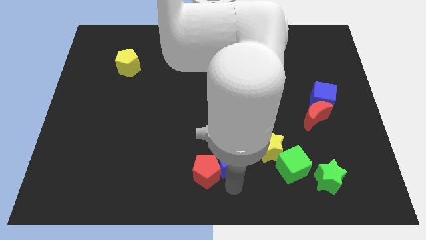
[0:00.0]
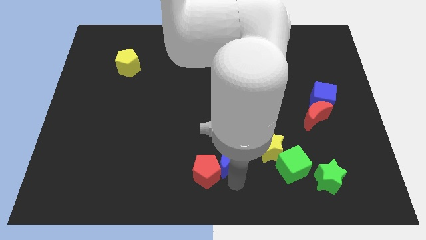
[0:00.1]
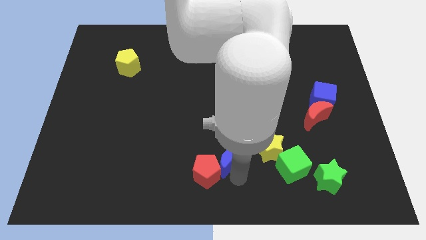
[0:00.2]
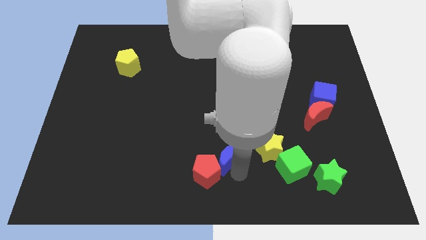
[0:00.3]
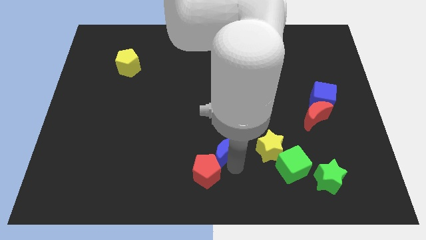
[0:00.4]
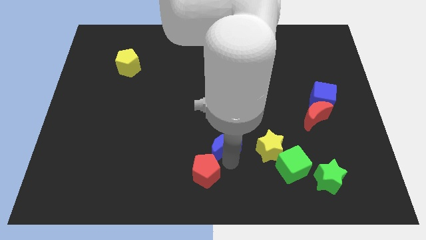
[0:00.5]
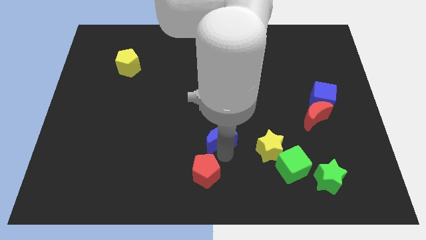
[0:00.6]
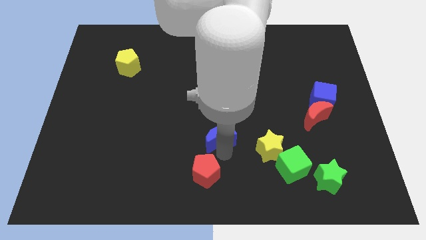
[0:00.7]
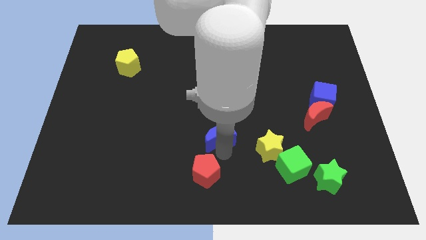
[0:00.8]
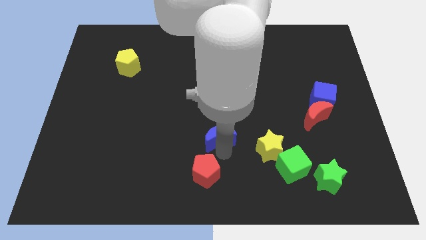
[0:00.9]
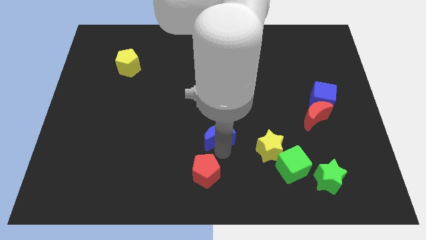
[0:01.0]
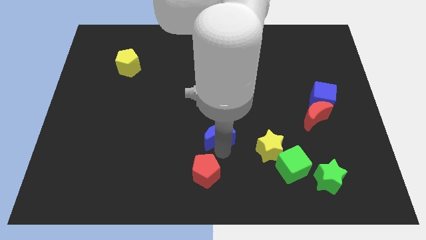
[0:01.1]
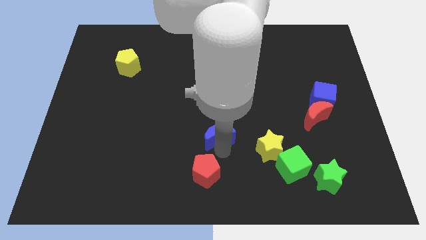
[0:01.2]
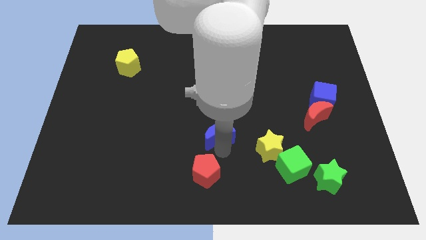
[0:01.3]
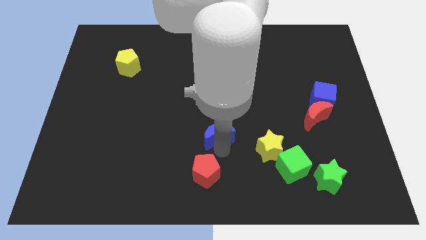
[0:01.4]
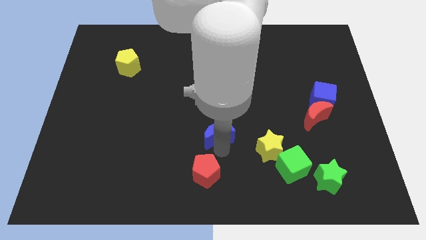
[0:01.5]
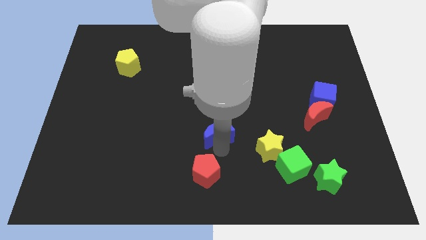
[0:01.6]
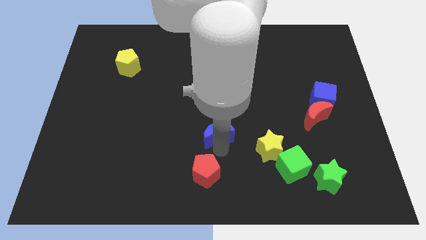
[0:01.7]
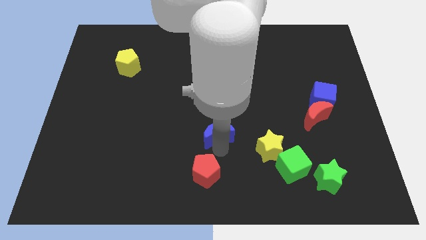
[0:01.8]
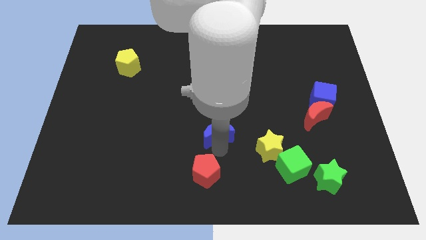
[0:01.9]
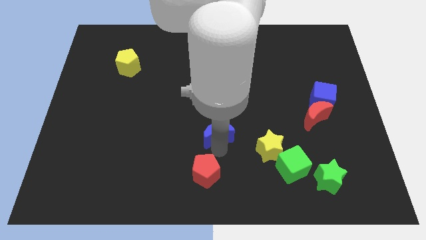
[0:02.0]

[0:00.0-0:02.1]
slide blue crescent above the red pentagon

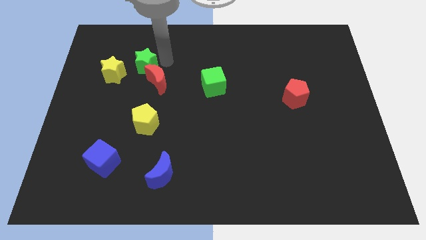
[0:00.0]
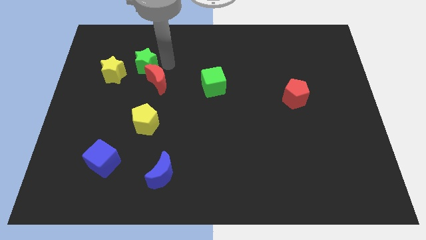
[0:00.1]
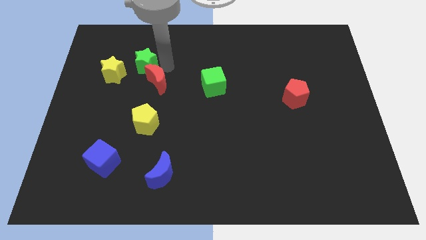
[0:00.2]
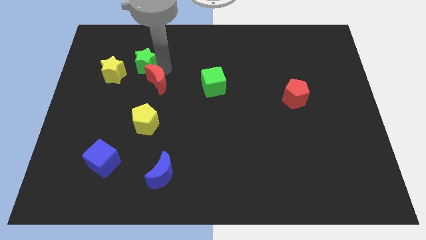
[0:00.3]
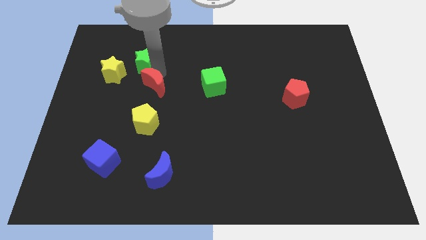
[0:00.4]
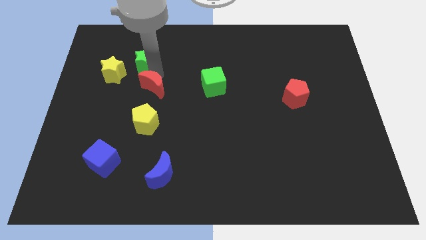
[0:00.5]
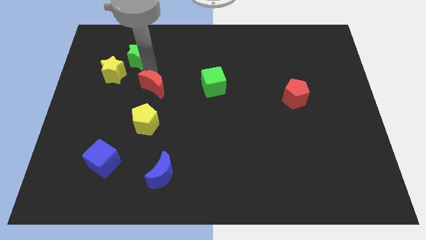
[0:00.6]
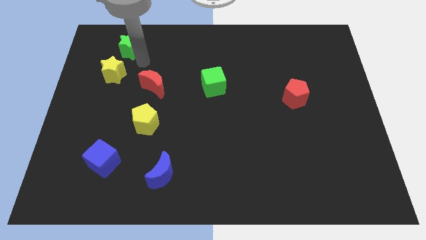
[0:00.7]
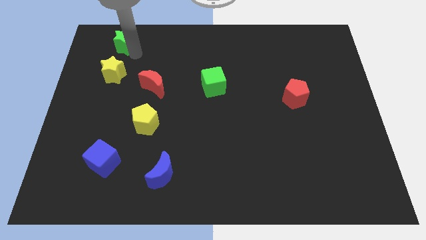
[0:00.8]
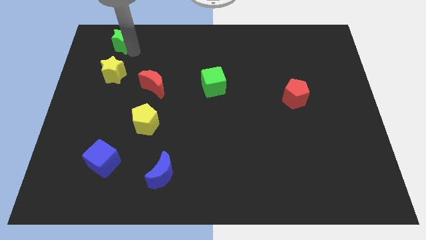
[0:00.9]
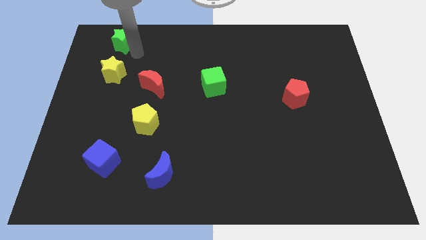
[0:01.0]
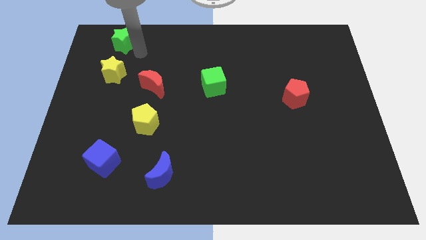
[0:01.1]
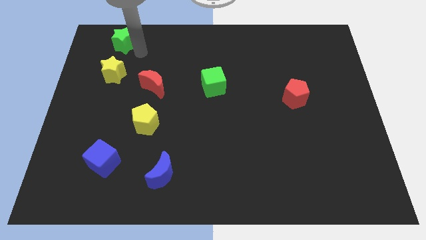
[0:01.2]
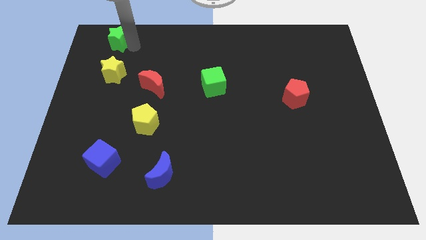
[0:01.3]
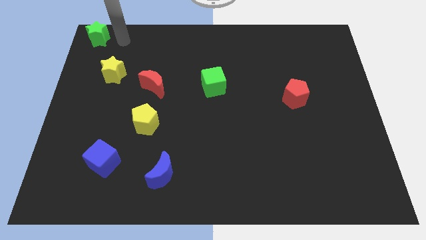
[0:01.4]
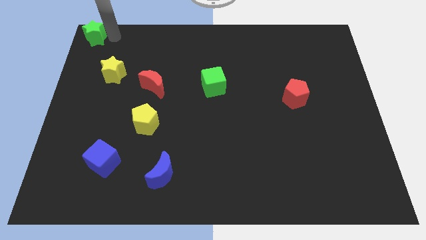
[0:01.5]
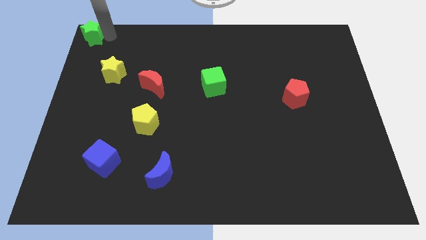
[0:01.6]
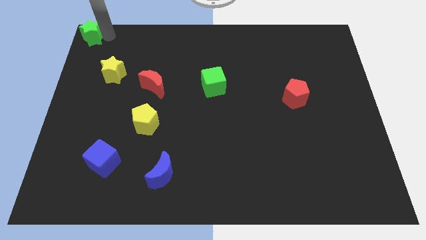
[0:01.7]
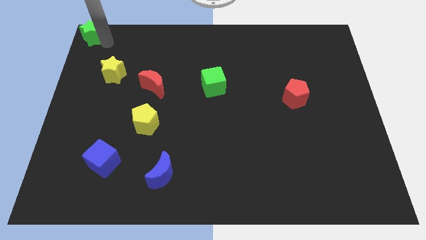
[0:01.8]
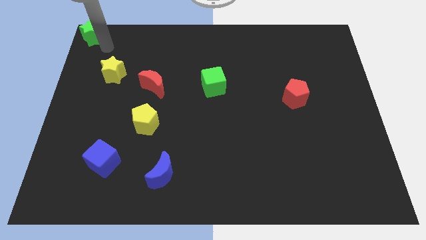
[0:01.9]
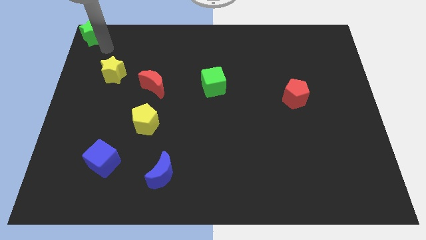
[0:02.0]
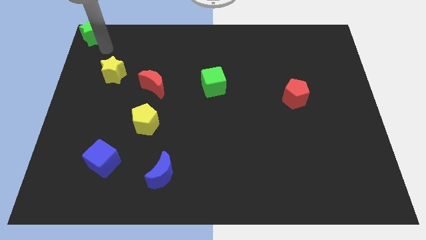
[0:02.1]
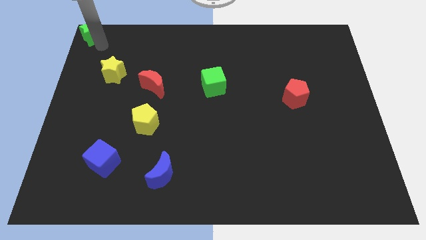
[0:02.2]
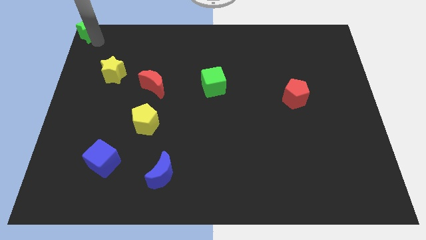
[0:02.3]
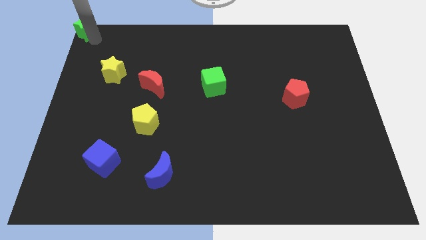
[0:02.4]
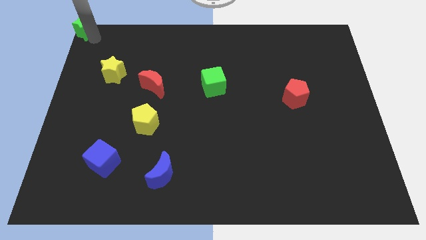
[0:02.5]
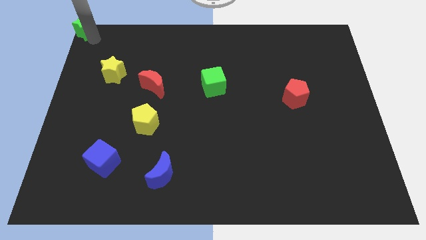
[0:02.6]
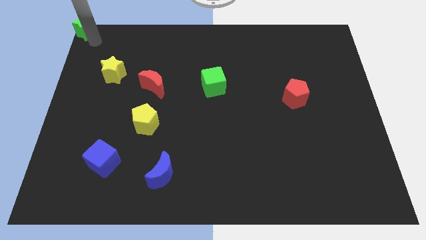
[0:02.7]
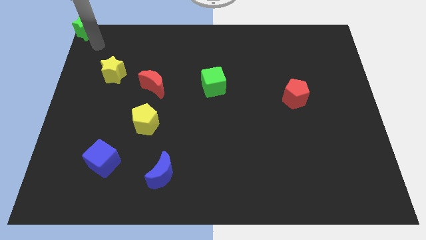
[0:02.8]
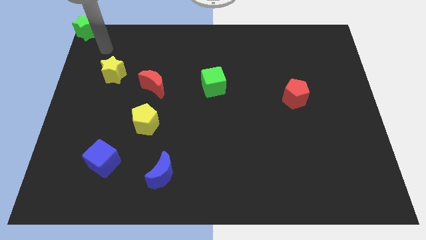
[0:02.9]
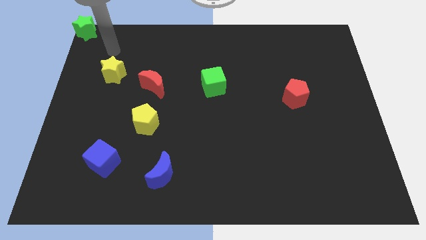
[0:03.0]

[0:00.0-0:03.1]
place the green star to the top left corner of the board

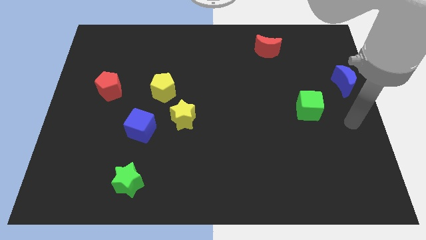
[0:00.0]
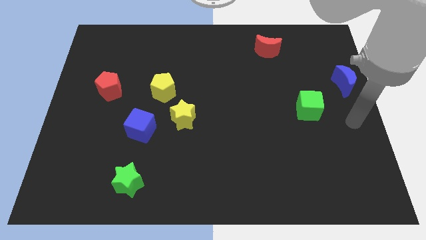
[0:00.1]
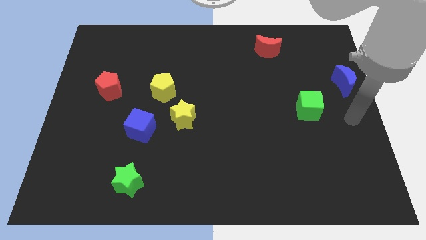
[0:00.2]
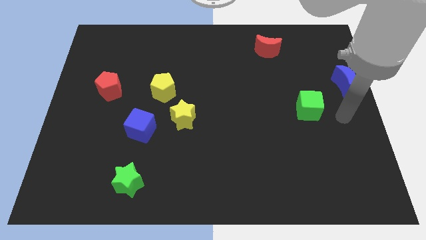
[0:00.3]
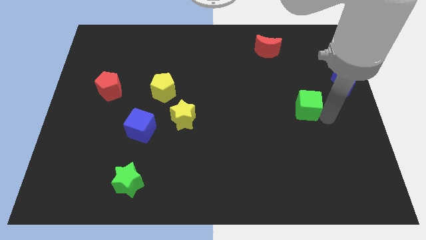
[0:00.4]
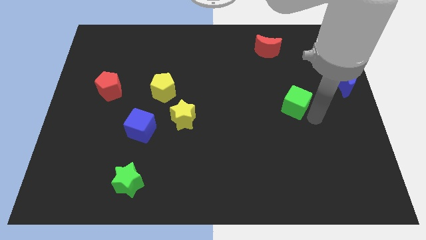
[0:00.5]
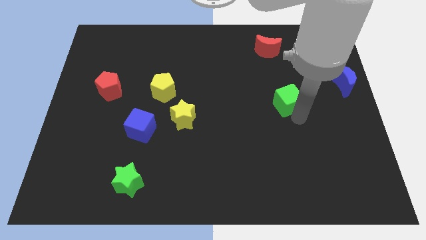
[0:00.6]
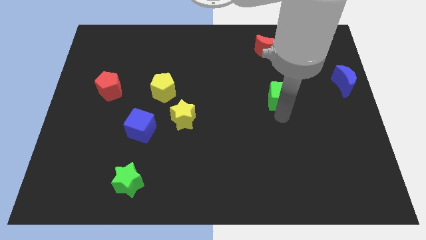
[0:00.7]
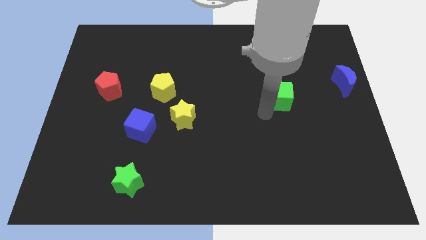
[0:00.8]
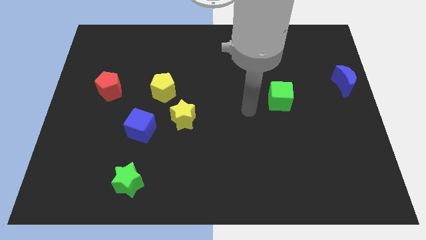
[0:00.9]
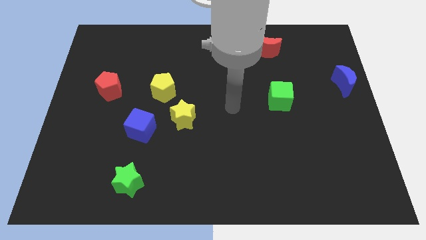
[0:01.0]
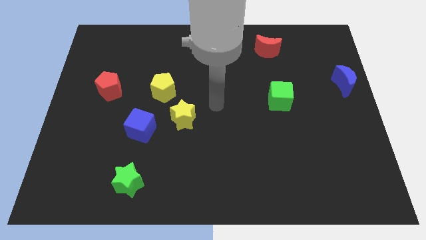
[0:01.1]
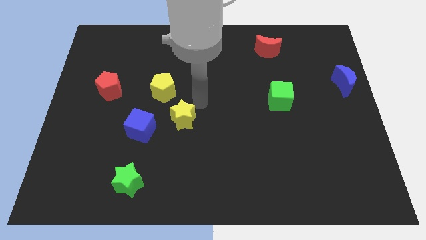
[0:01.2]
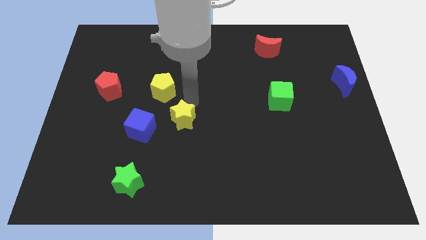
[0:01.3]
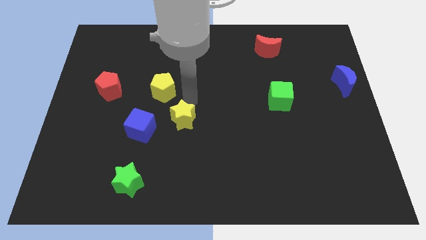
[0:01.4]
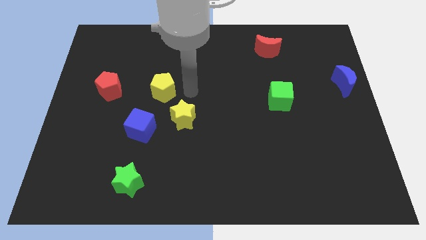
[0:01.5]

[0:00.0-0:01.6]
place green cube to the bottom of red moon

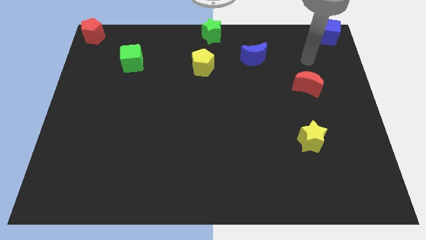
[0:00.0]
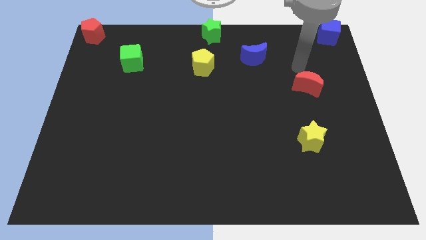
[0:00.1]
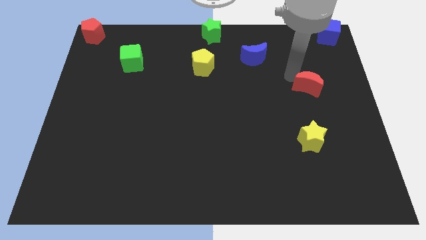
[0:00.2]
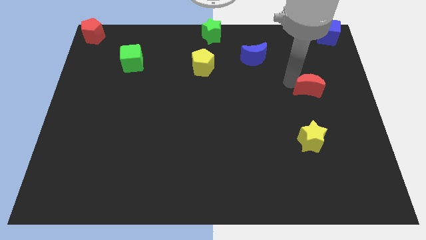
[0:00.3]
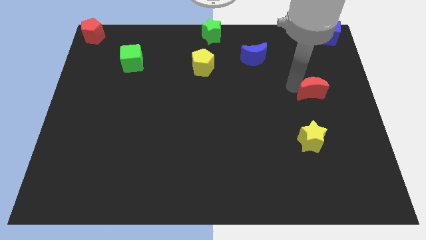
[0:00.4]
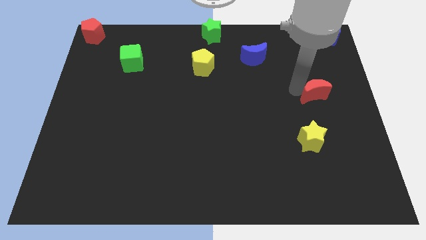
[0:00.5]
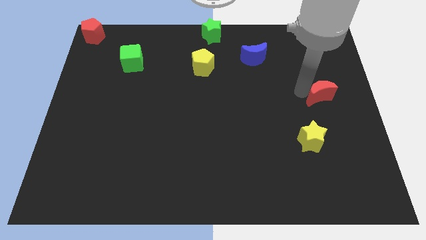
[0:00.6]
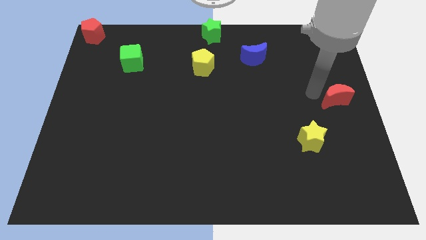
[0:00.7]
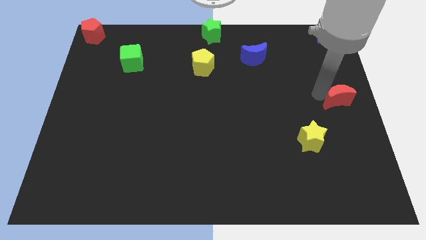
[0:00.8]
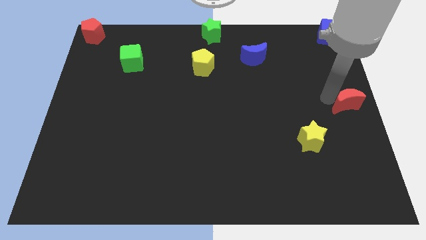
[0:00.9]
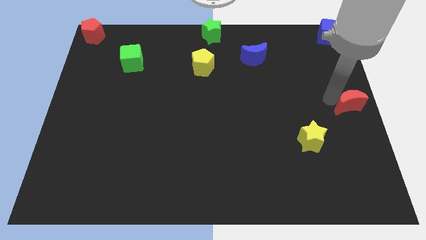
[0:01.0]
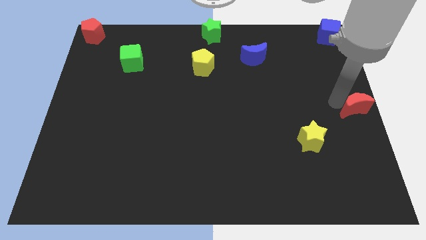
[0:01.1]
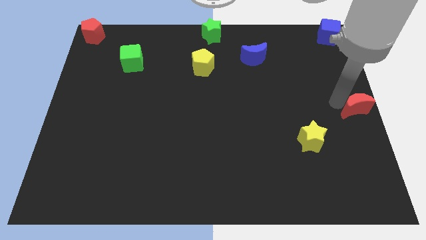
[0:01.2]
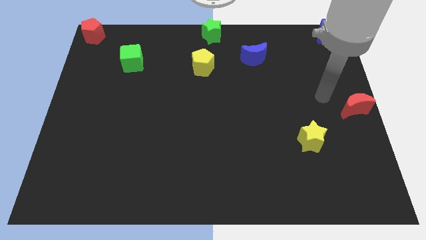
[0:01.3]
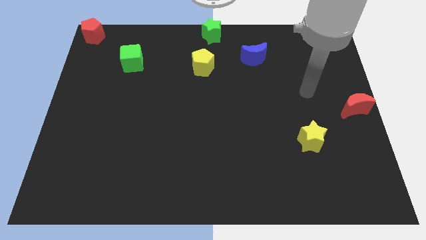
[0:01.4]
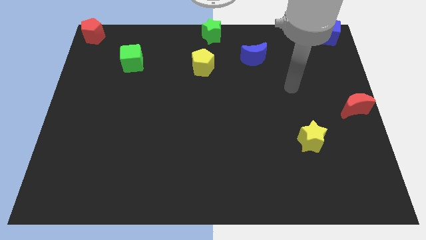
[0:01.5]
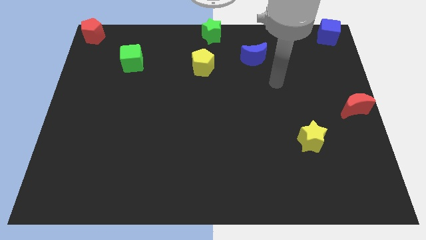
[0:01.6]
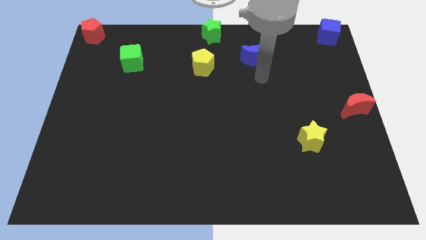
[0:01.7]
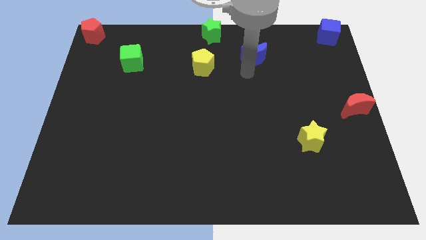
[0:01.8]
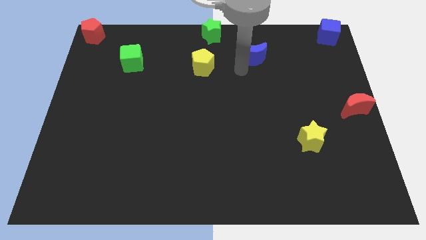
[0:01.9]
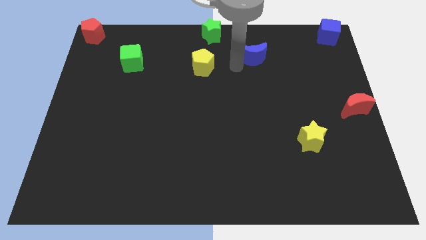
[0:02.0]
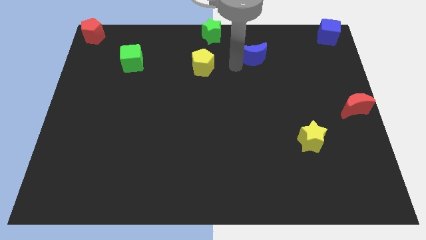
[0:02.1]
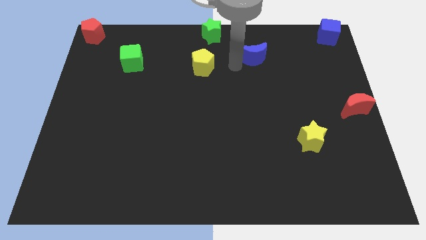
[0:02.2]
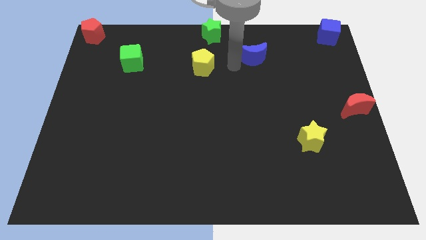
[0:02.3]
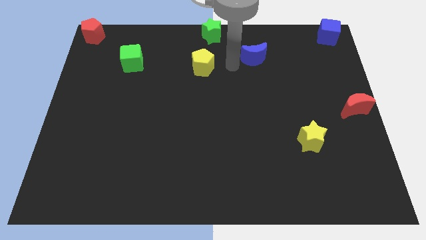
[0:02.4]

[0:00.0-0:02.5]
place the red moon at the center right side of the board
